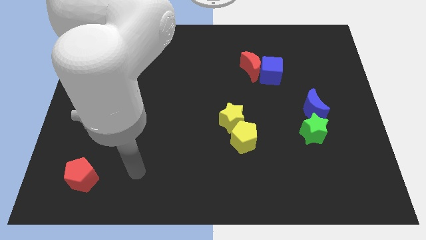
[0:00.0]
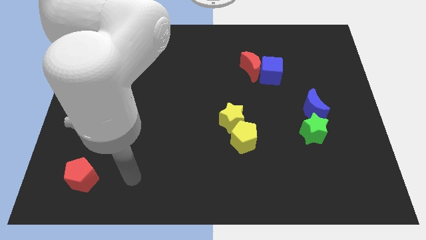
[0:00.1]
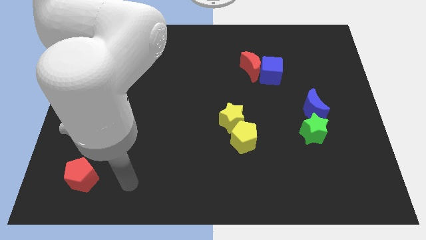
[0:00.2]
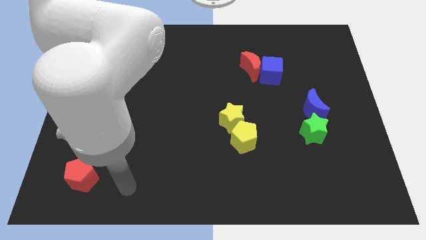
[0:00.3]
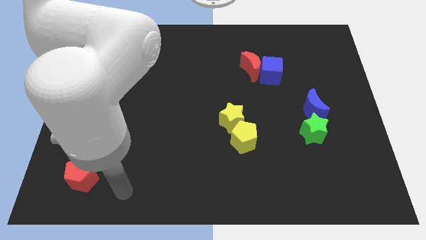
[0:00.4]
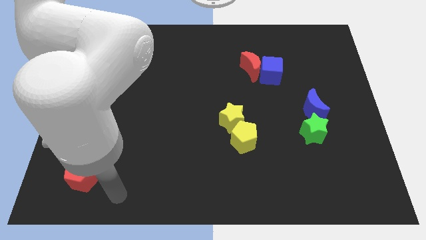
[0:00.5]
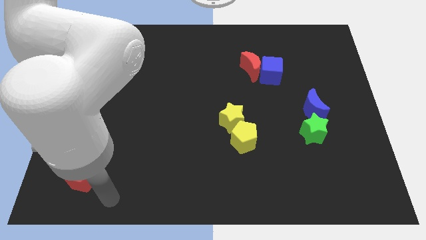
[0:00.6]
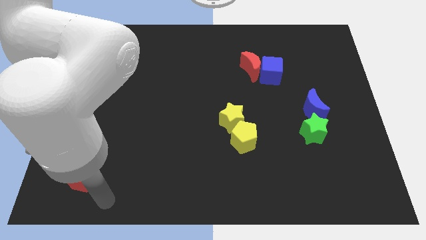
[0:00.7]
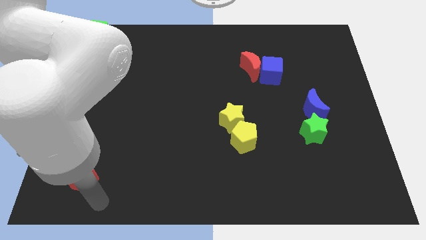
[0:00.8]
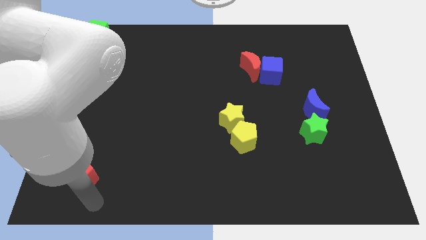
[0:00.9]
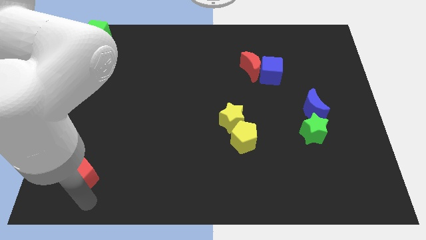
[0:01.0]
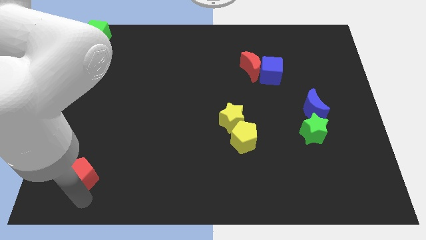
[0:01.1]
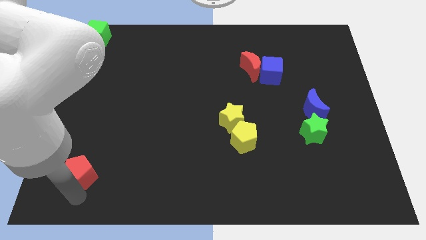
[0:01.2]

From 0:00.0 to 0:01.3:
touch the bottom of red pentagon

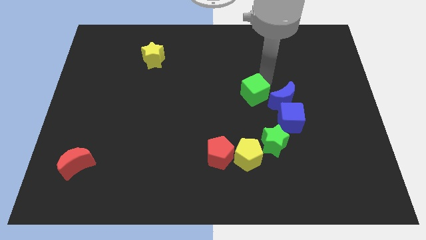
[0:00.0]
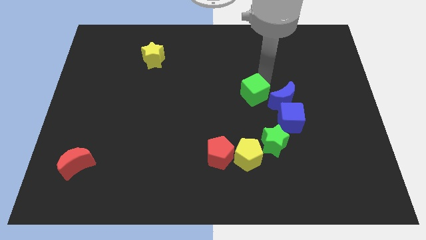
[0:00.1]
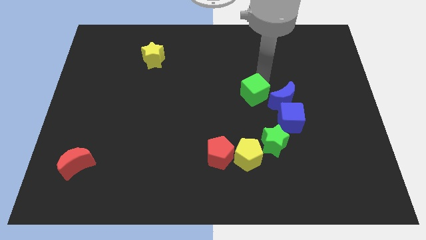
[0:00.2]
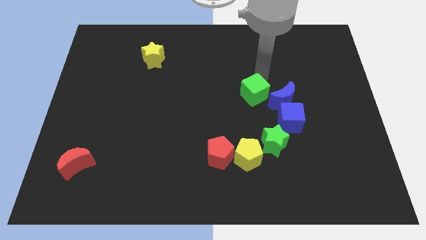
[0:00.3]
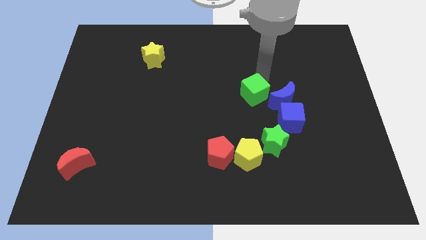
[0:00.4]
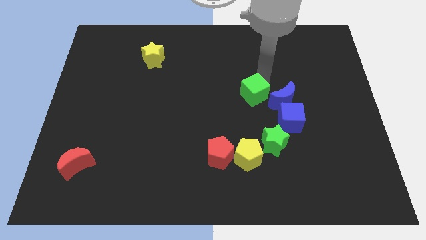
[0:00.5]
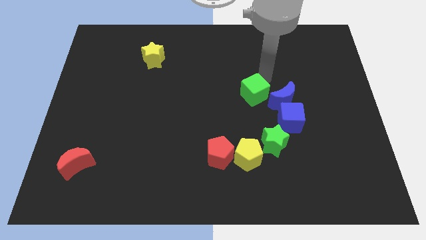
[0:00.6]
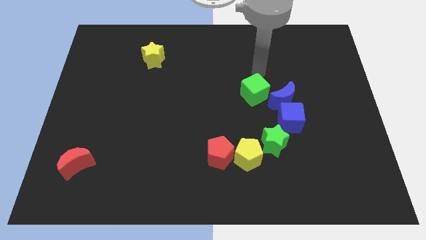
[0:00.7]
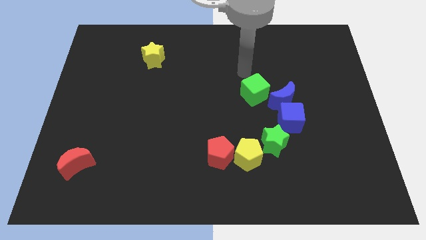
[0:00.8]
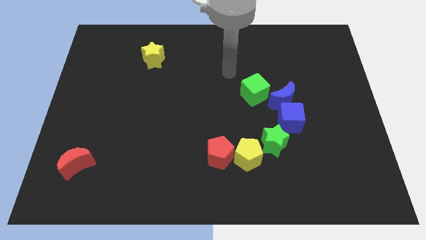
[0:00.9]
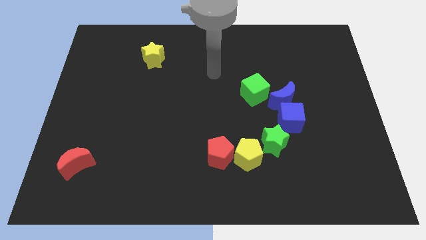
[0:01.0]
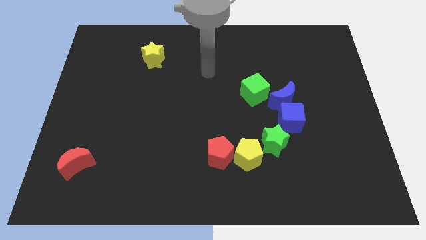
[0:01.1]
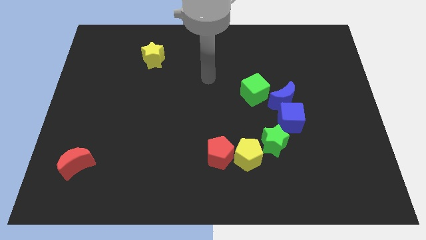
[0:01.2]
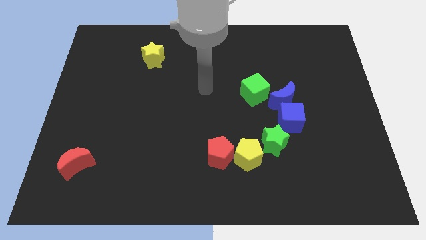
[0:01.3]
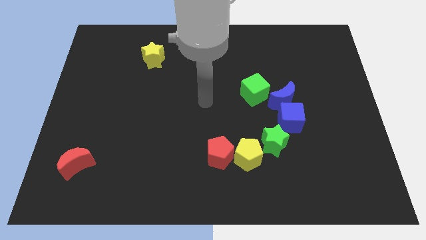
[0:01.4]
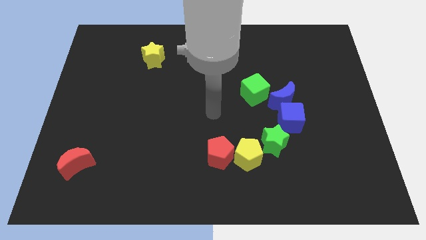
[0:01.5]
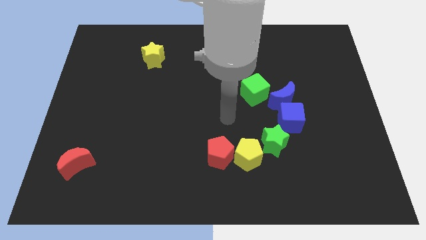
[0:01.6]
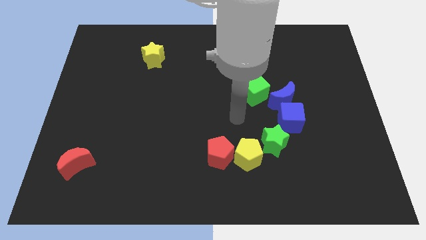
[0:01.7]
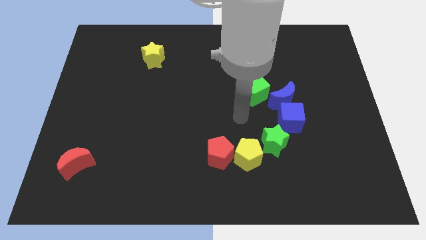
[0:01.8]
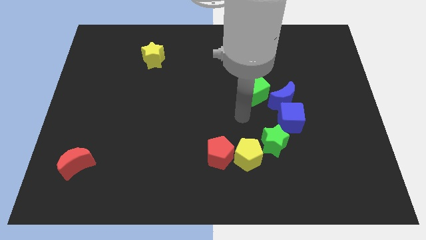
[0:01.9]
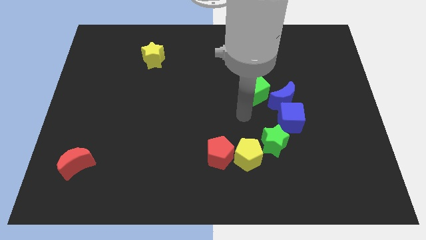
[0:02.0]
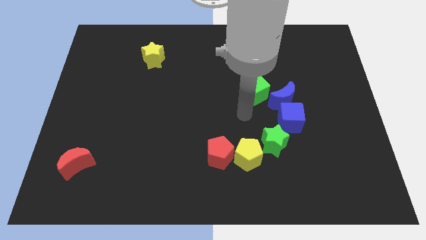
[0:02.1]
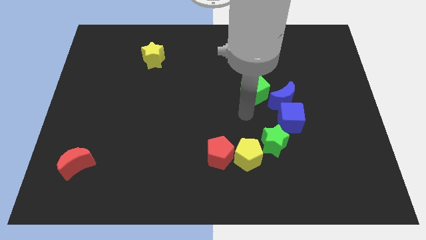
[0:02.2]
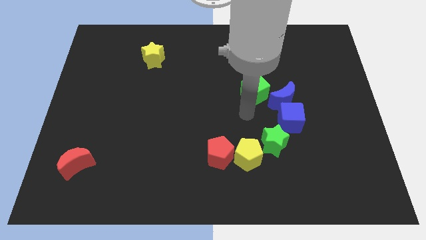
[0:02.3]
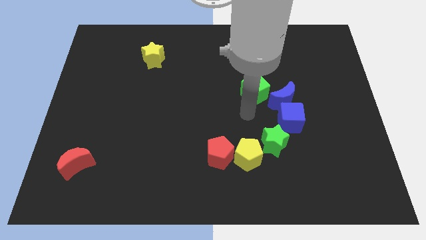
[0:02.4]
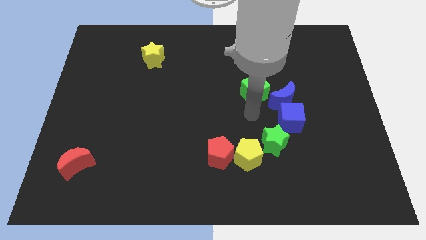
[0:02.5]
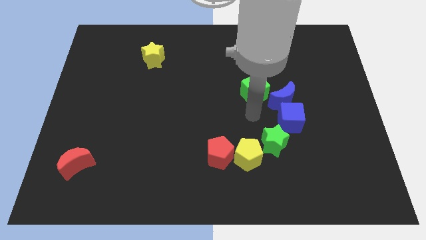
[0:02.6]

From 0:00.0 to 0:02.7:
move your arm below the green cube

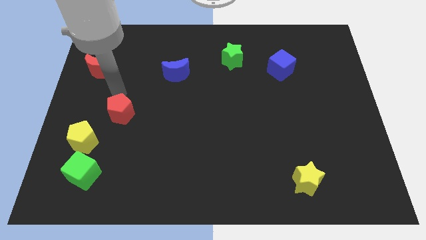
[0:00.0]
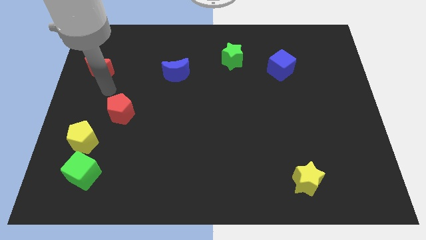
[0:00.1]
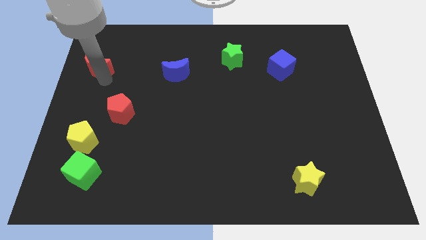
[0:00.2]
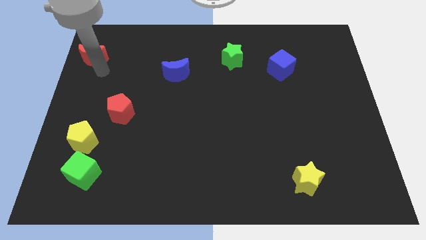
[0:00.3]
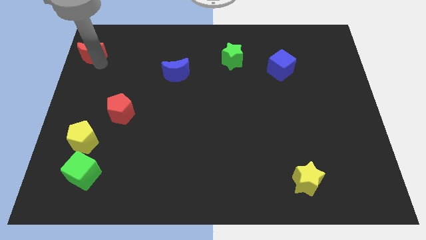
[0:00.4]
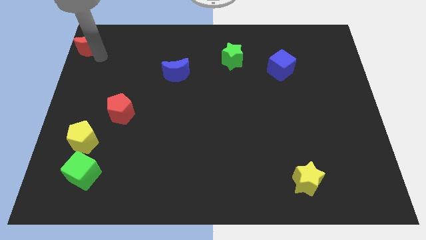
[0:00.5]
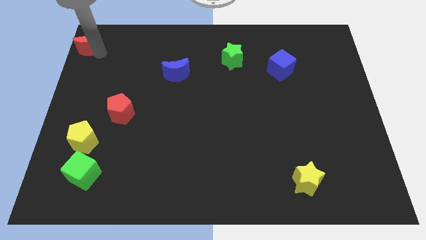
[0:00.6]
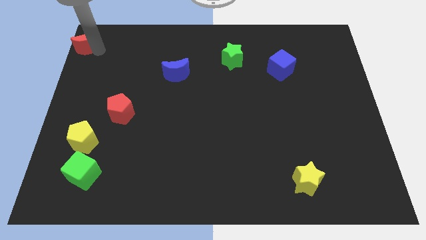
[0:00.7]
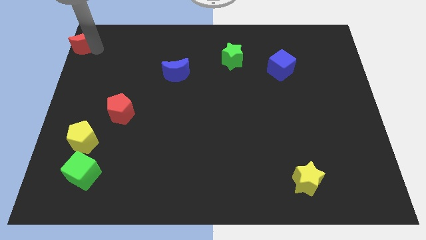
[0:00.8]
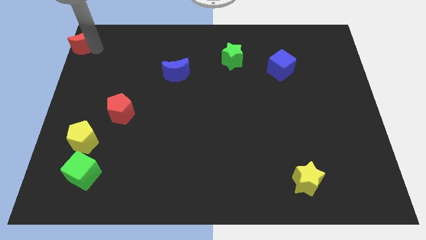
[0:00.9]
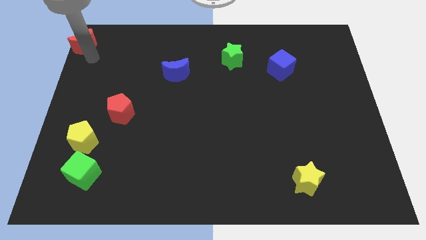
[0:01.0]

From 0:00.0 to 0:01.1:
slide red moon towards top left

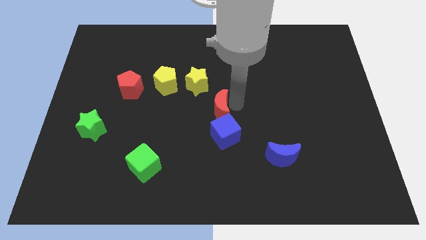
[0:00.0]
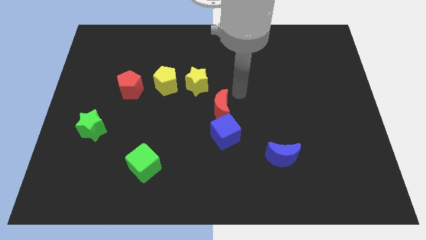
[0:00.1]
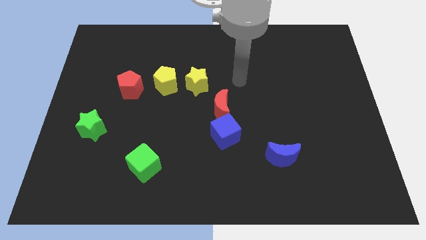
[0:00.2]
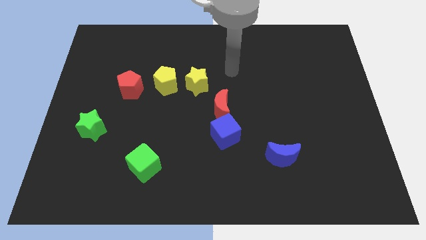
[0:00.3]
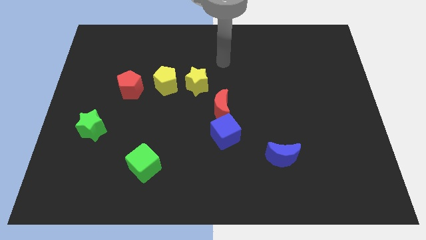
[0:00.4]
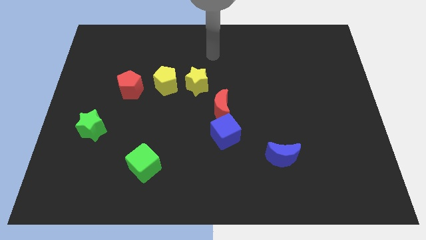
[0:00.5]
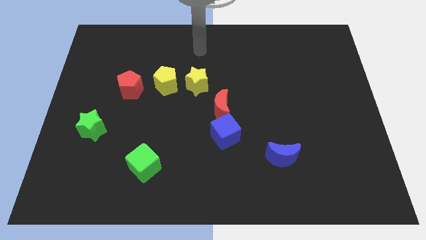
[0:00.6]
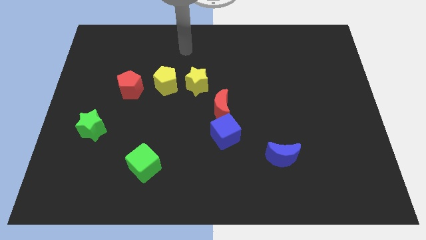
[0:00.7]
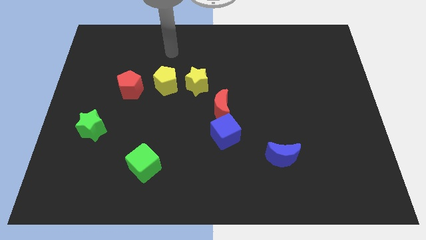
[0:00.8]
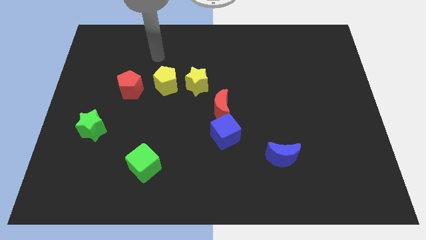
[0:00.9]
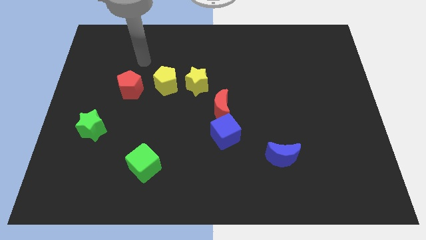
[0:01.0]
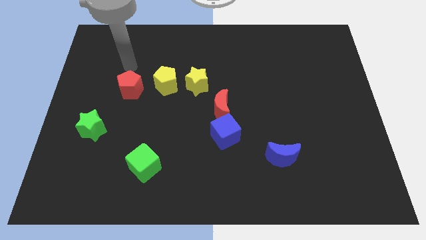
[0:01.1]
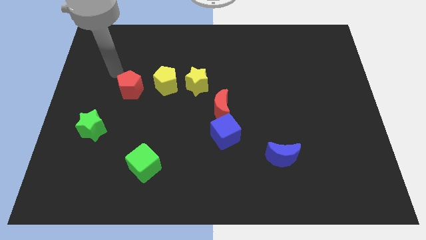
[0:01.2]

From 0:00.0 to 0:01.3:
go and point your hand above the red pentagon

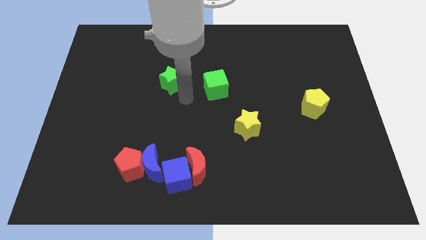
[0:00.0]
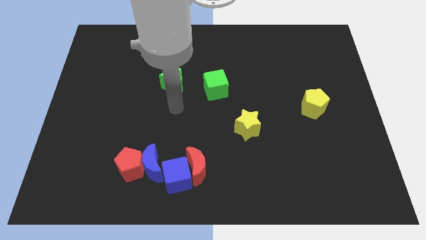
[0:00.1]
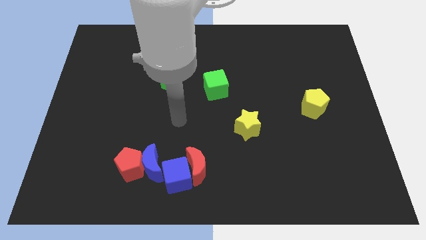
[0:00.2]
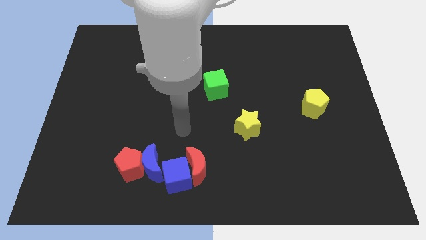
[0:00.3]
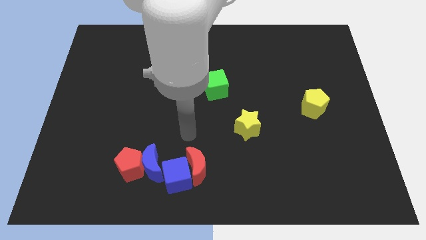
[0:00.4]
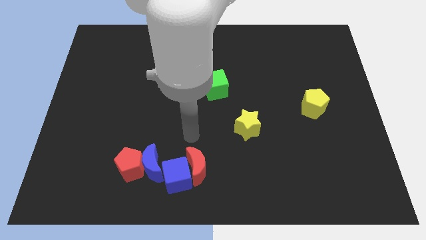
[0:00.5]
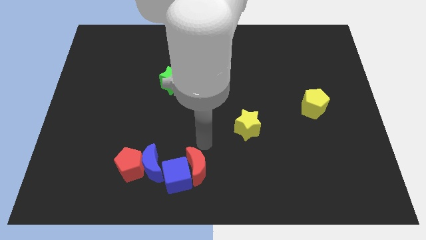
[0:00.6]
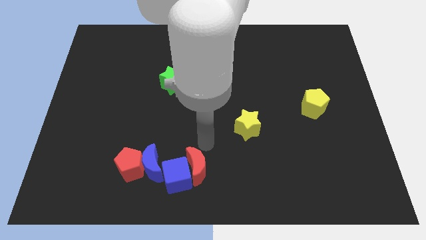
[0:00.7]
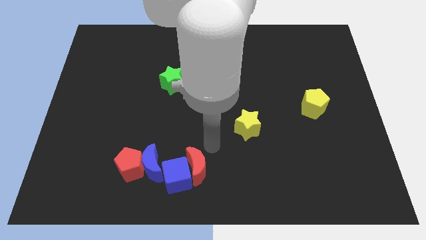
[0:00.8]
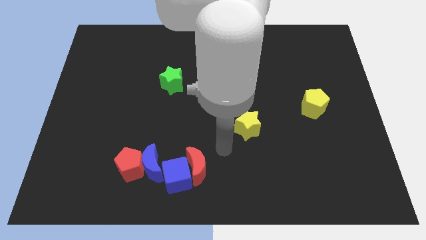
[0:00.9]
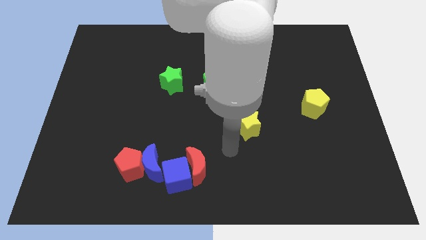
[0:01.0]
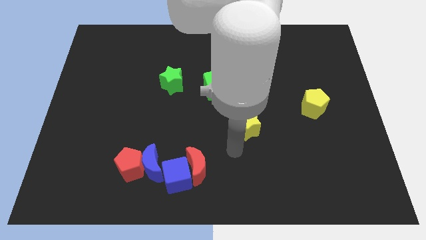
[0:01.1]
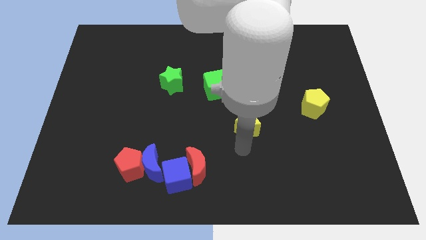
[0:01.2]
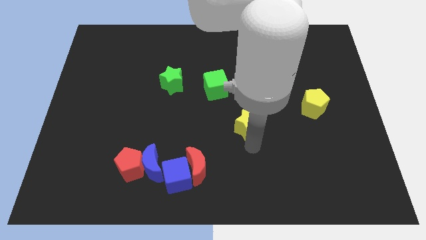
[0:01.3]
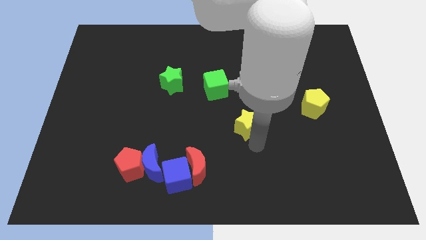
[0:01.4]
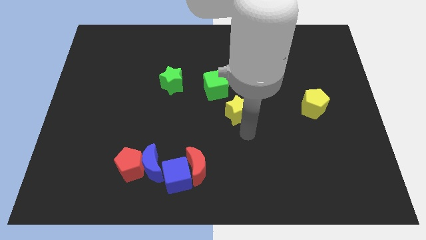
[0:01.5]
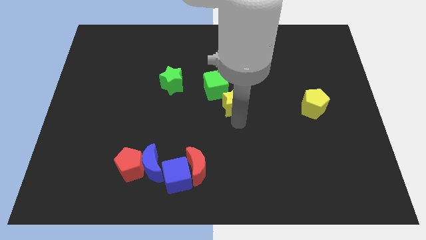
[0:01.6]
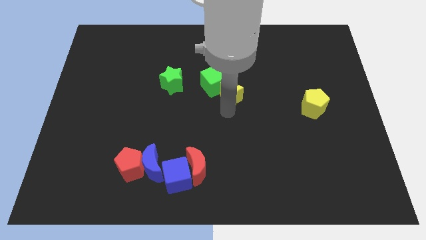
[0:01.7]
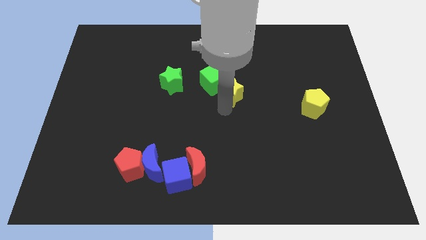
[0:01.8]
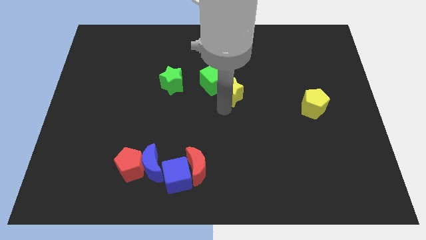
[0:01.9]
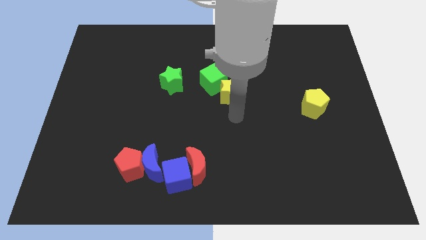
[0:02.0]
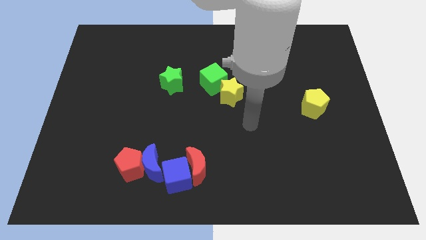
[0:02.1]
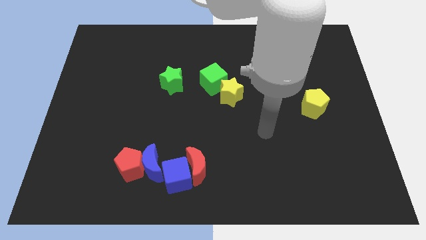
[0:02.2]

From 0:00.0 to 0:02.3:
push the yellow star into the green cube

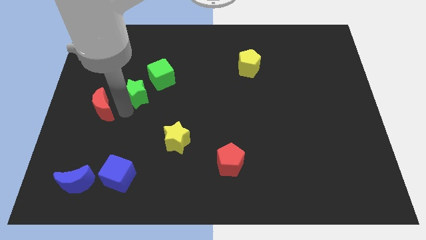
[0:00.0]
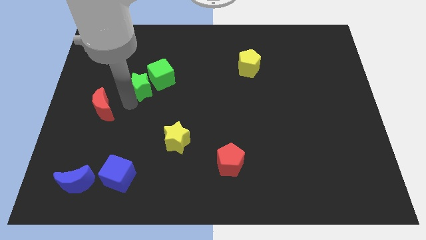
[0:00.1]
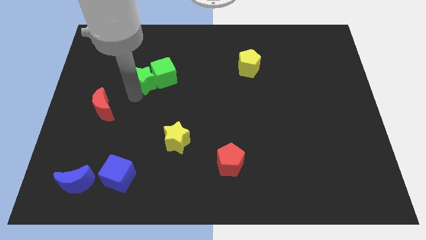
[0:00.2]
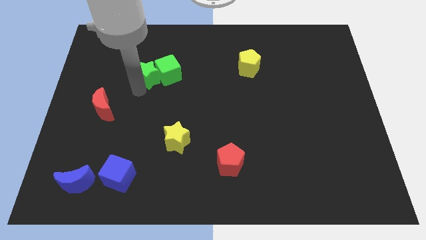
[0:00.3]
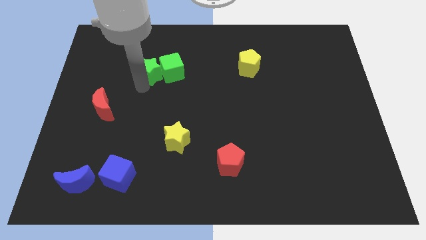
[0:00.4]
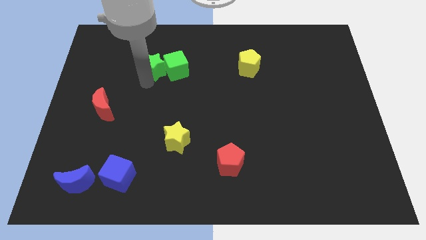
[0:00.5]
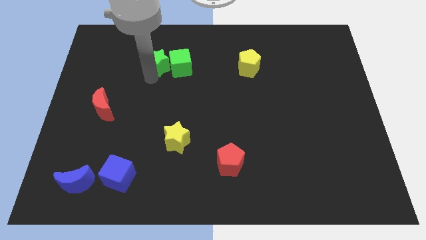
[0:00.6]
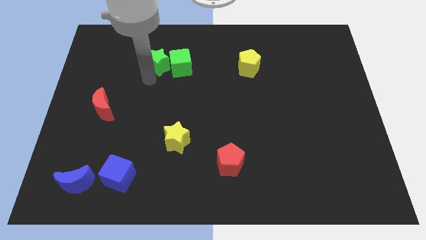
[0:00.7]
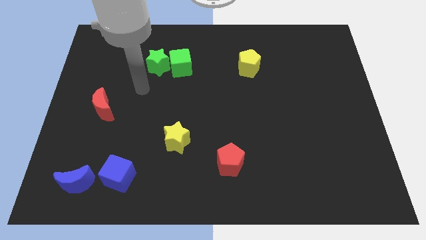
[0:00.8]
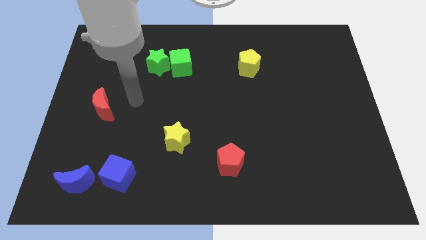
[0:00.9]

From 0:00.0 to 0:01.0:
move both the green blocks to the left side of the yellow pentagon
